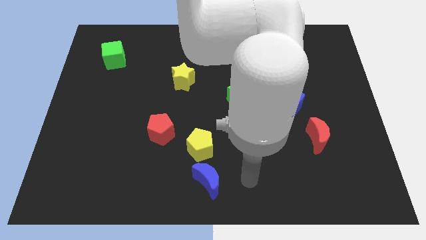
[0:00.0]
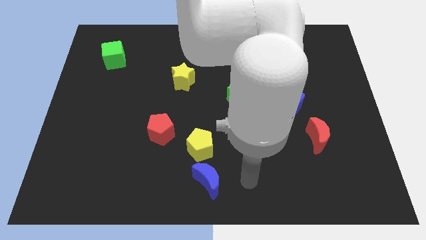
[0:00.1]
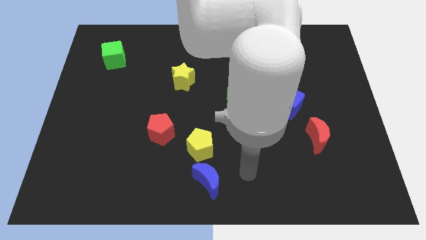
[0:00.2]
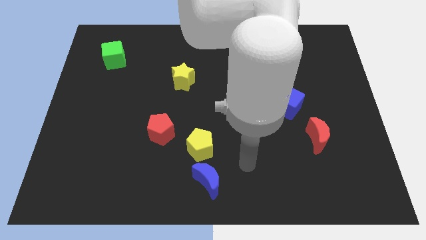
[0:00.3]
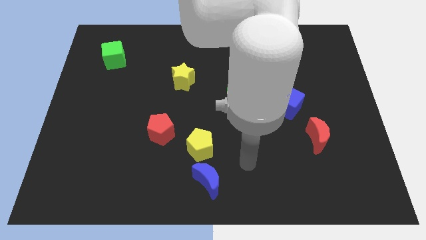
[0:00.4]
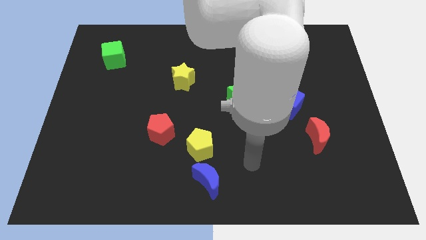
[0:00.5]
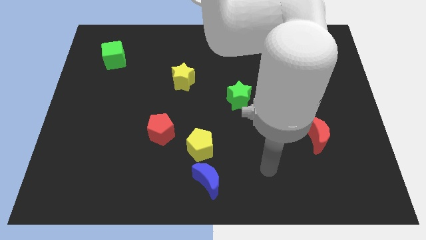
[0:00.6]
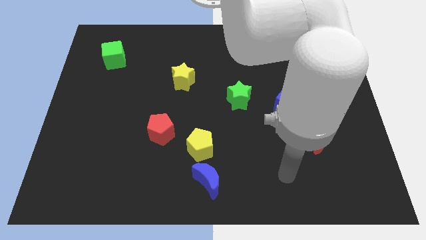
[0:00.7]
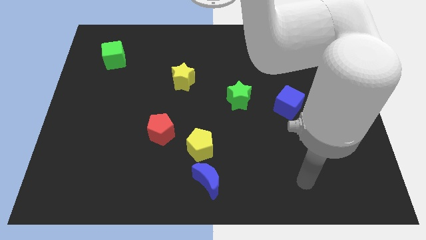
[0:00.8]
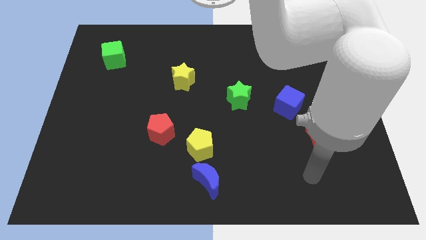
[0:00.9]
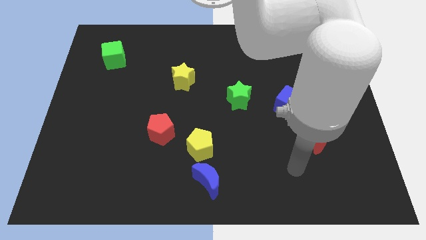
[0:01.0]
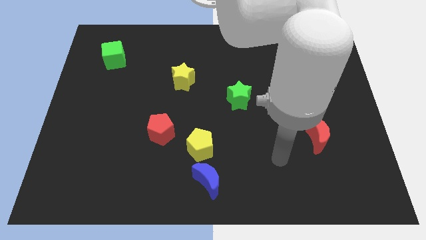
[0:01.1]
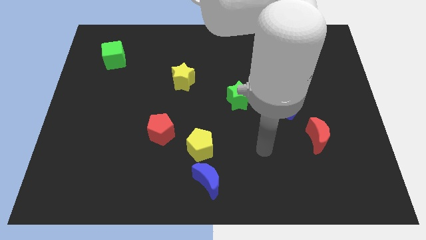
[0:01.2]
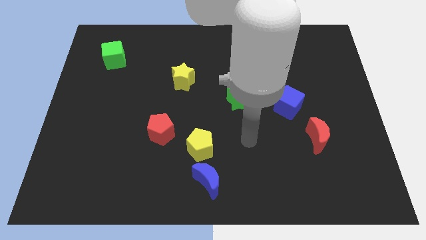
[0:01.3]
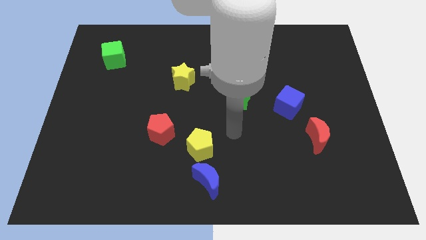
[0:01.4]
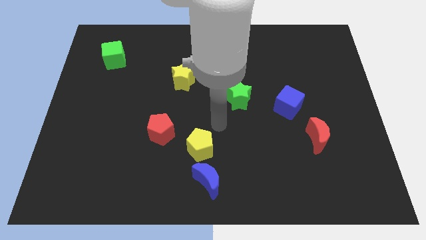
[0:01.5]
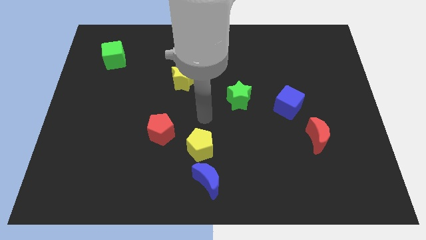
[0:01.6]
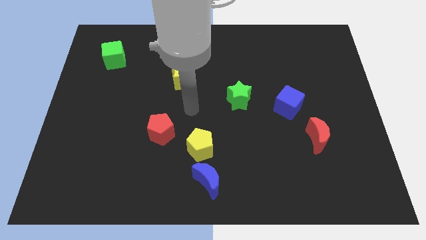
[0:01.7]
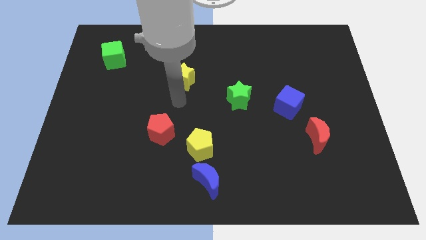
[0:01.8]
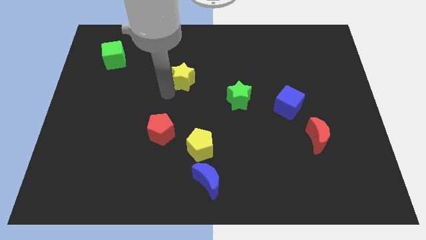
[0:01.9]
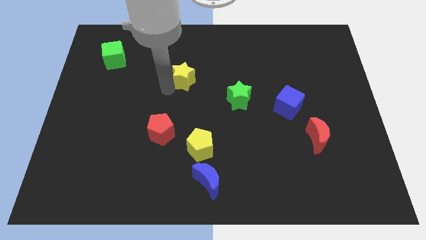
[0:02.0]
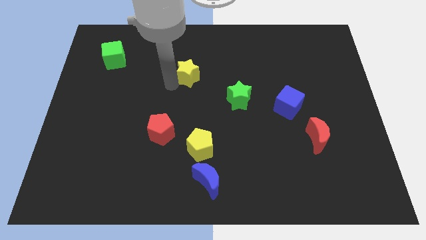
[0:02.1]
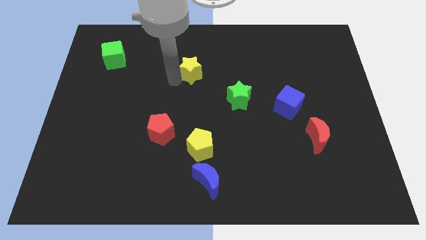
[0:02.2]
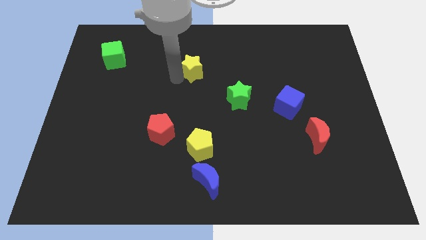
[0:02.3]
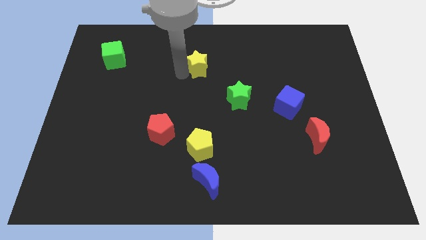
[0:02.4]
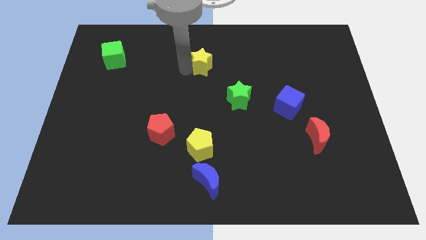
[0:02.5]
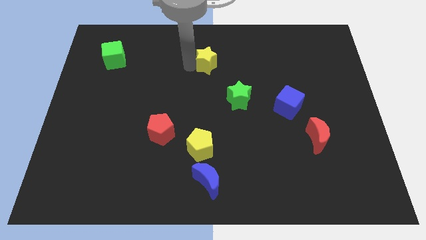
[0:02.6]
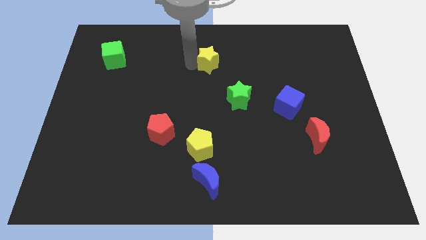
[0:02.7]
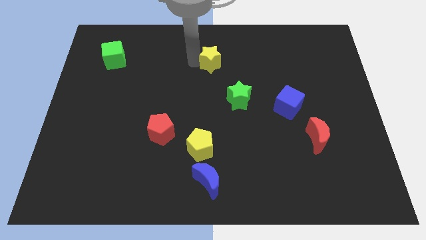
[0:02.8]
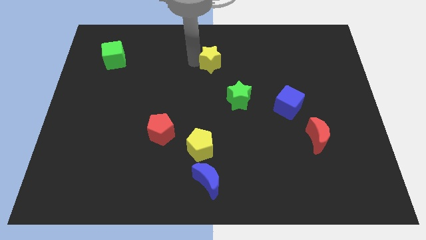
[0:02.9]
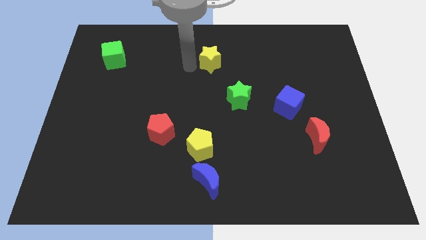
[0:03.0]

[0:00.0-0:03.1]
push the yellow star up slightly towards the top center

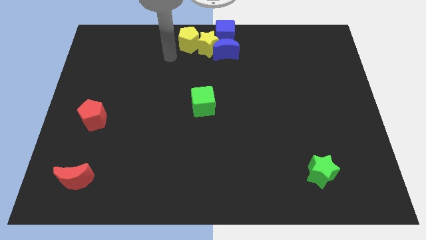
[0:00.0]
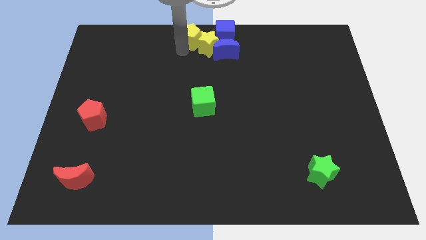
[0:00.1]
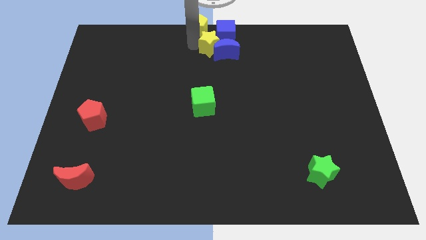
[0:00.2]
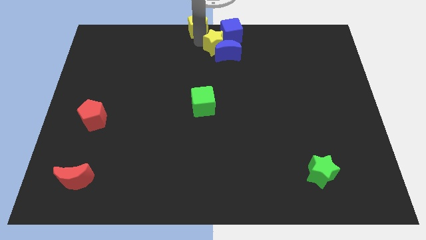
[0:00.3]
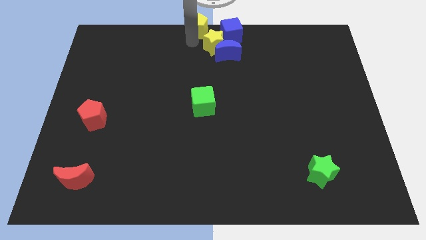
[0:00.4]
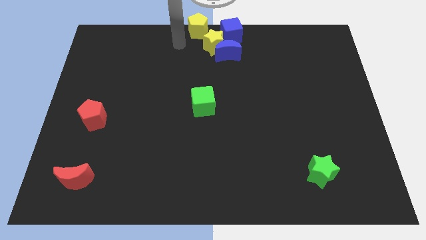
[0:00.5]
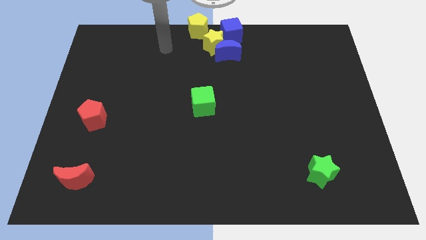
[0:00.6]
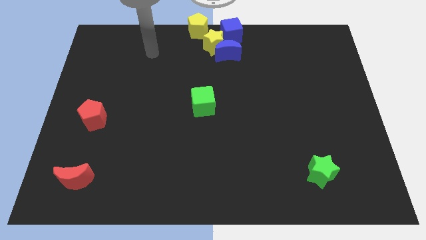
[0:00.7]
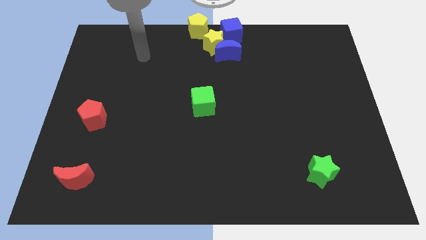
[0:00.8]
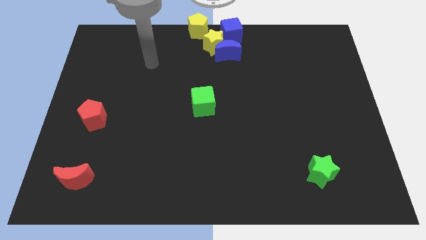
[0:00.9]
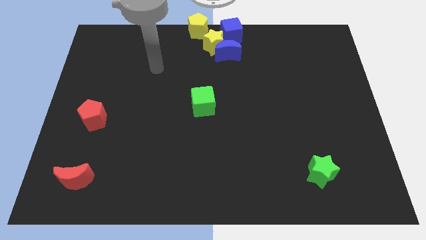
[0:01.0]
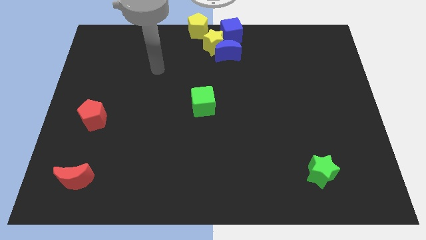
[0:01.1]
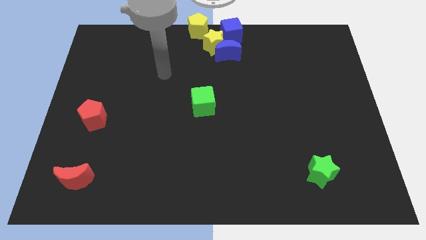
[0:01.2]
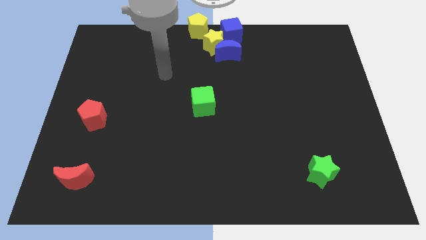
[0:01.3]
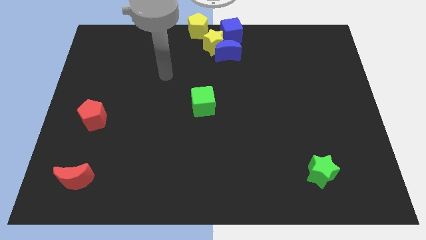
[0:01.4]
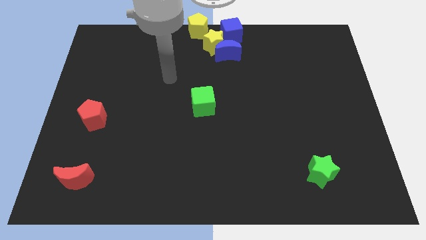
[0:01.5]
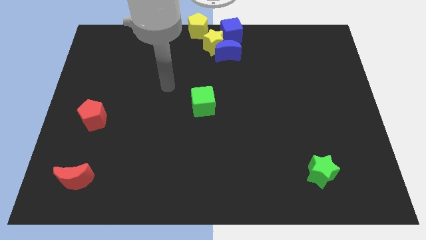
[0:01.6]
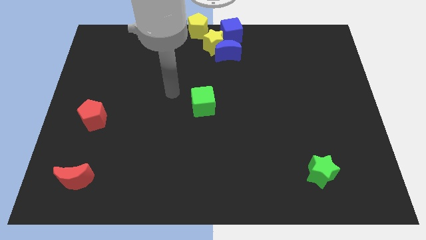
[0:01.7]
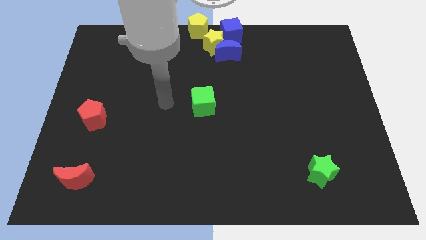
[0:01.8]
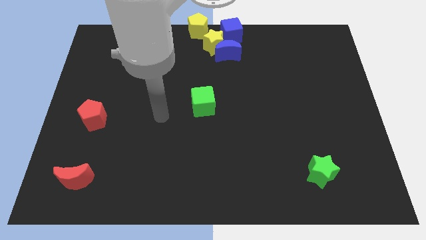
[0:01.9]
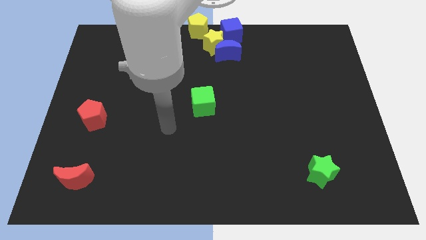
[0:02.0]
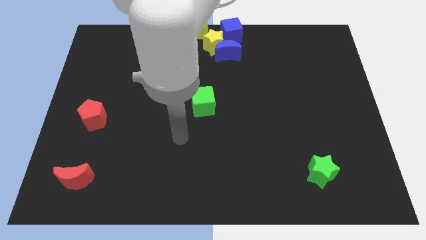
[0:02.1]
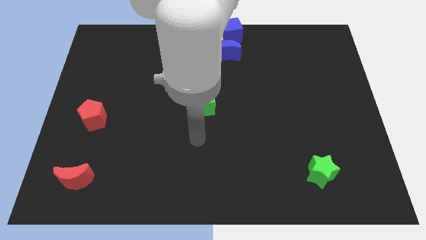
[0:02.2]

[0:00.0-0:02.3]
move your arm towards the bottom side of the green cube

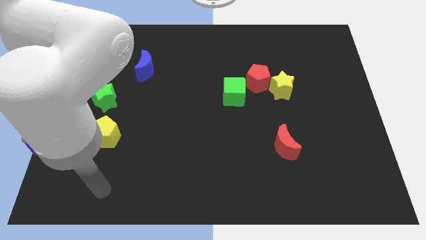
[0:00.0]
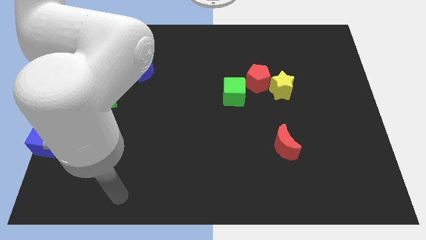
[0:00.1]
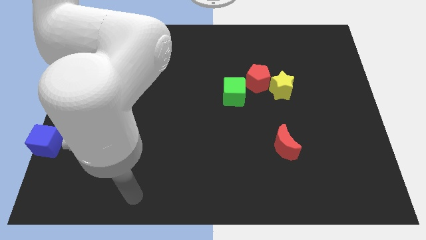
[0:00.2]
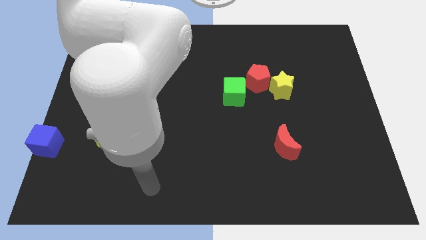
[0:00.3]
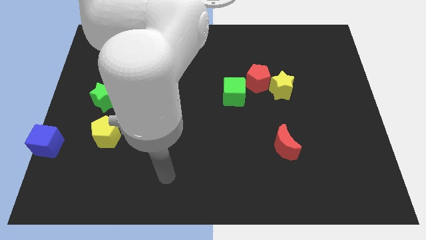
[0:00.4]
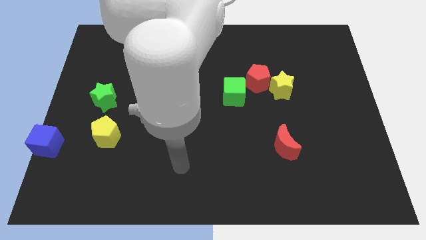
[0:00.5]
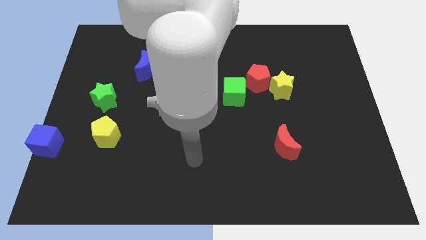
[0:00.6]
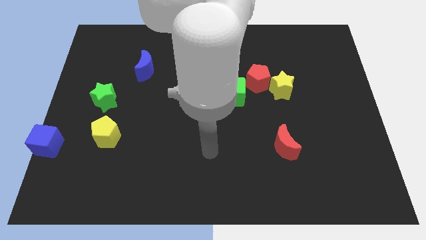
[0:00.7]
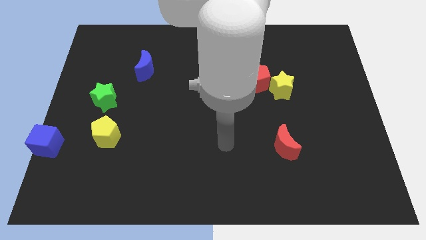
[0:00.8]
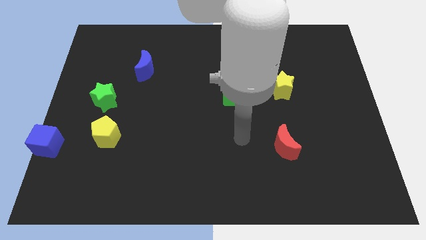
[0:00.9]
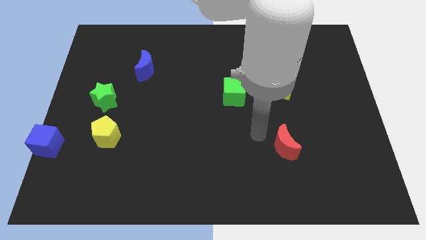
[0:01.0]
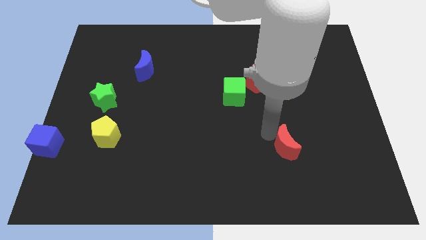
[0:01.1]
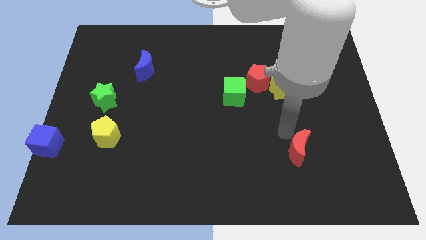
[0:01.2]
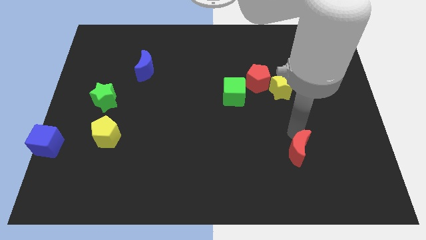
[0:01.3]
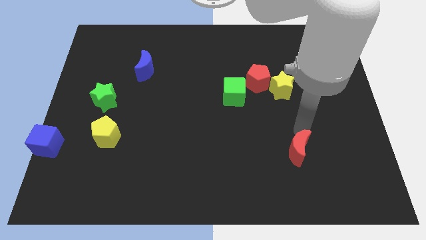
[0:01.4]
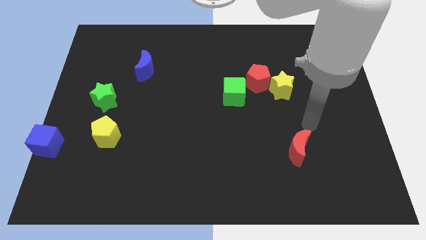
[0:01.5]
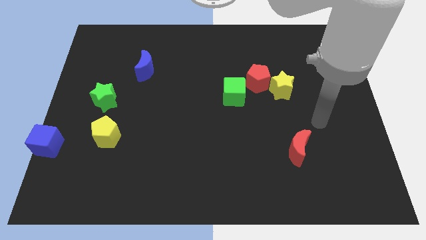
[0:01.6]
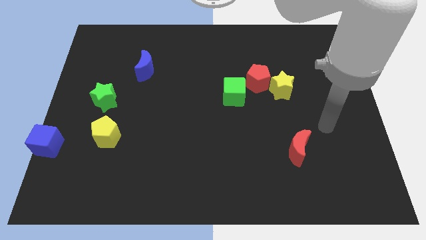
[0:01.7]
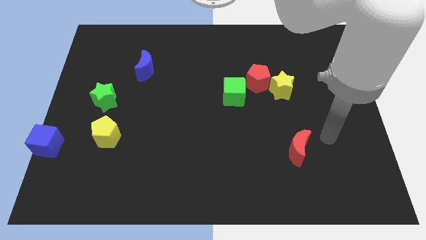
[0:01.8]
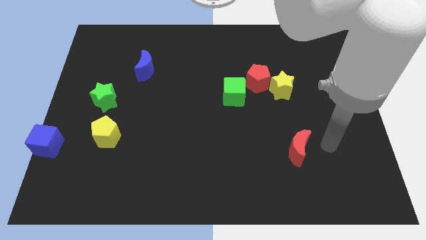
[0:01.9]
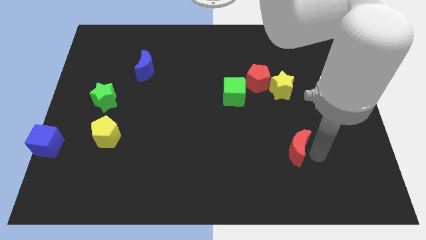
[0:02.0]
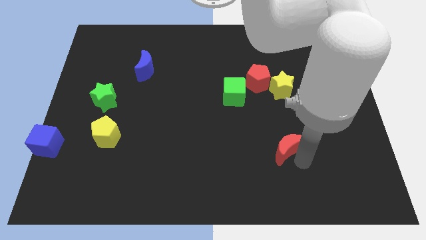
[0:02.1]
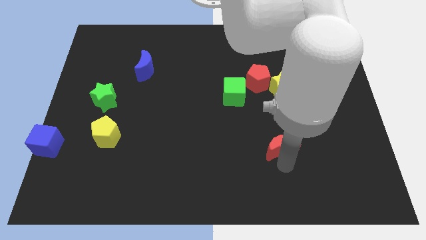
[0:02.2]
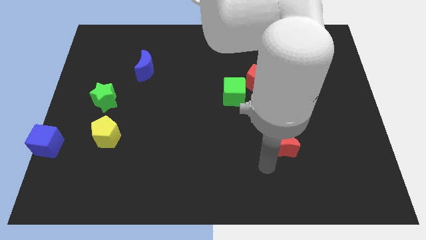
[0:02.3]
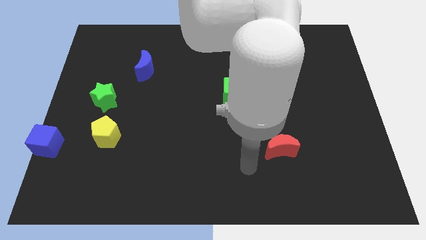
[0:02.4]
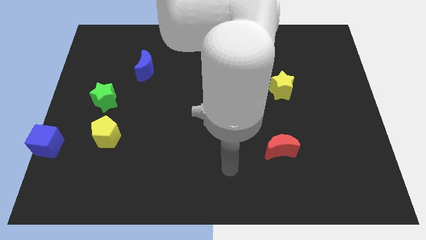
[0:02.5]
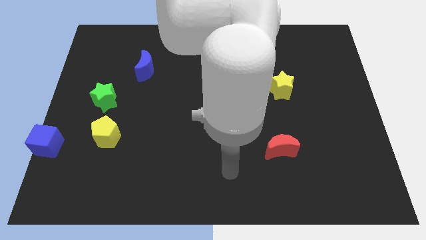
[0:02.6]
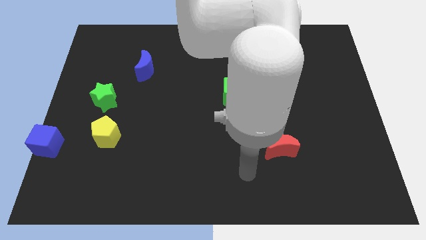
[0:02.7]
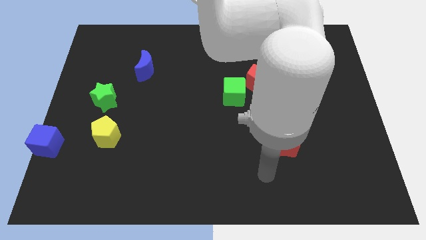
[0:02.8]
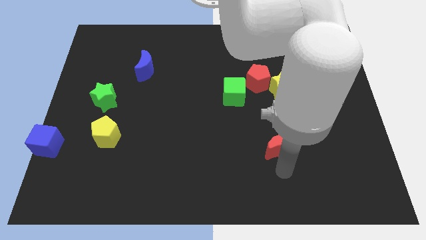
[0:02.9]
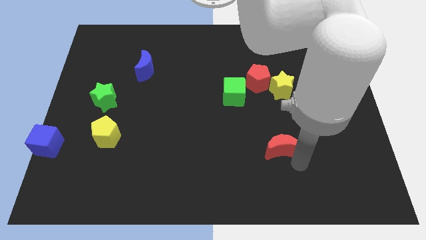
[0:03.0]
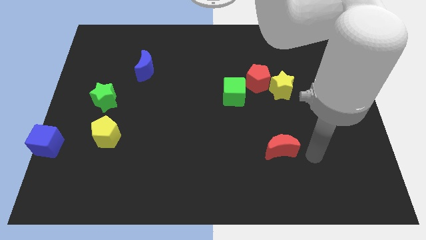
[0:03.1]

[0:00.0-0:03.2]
slide red moon below the yellow star

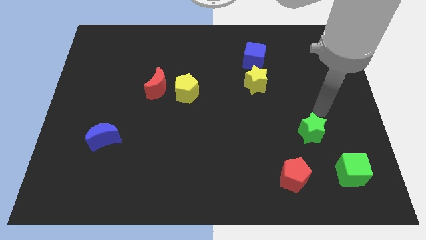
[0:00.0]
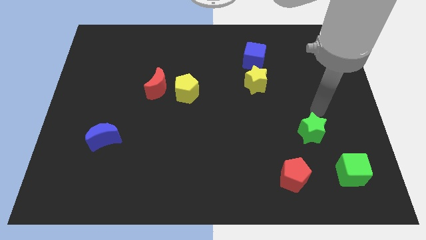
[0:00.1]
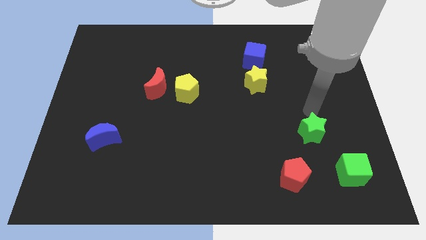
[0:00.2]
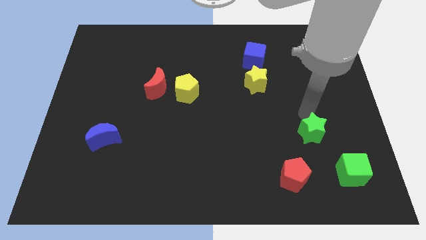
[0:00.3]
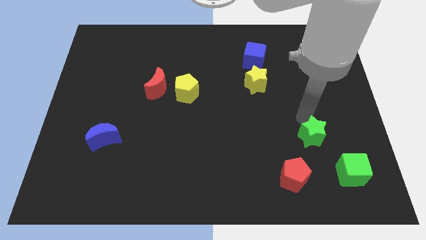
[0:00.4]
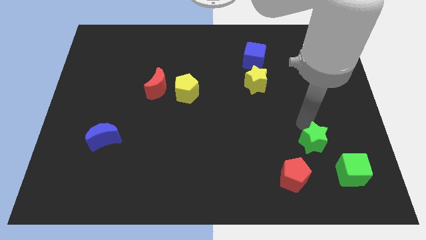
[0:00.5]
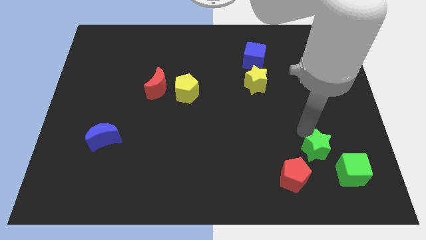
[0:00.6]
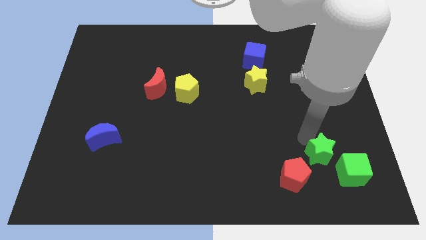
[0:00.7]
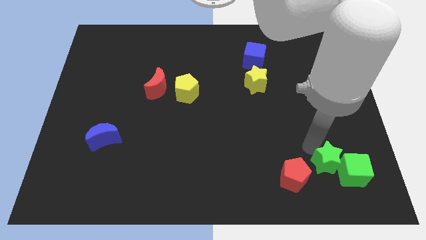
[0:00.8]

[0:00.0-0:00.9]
push green star close to green cube
